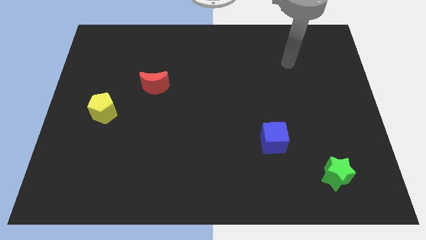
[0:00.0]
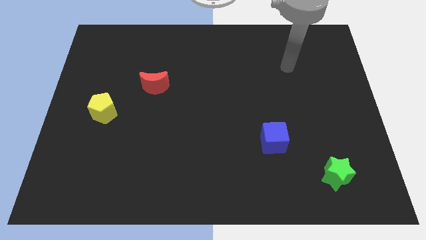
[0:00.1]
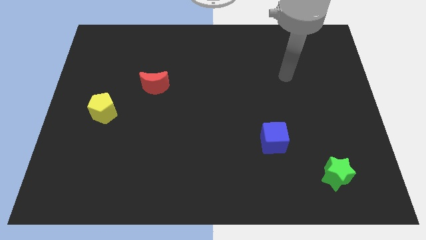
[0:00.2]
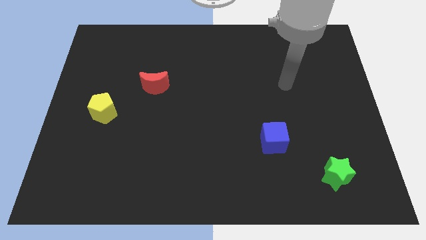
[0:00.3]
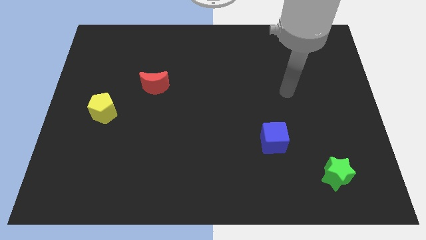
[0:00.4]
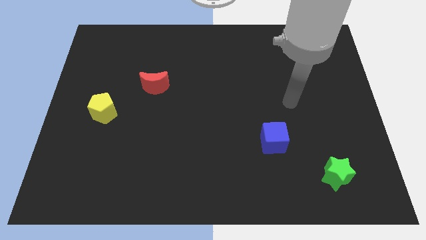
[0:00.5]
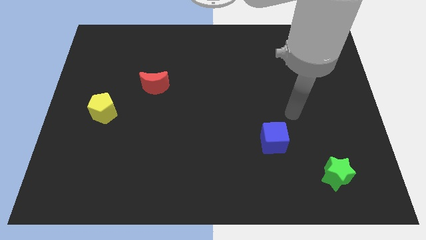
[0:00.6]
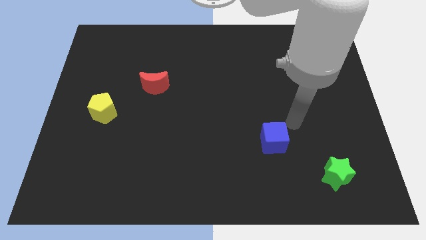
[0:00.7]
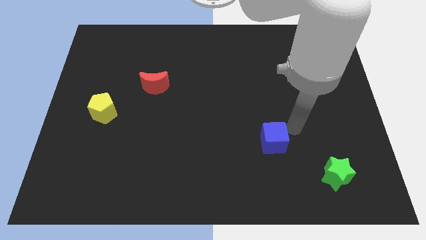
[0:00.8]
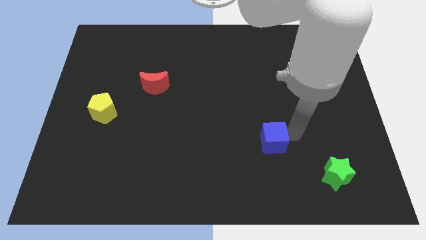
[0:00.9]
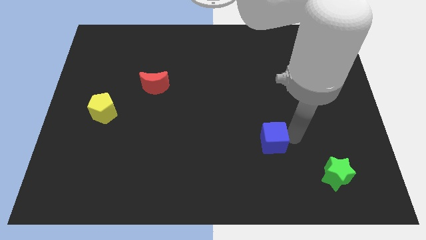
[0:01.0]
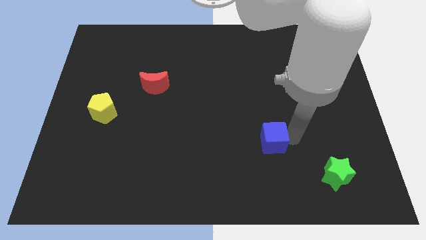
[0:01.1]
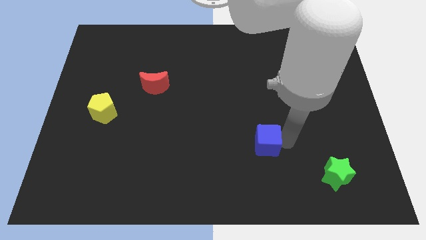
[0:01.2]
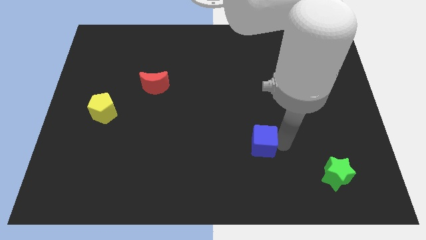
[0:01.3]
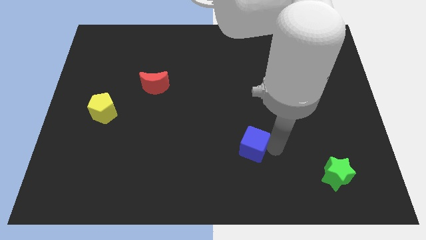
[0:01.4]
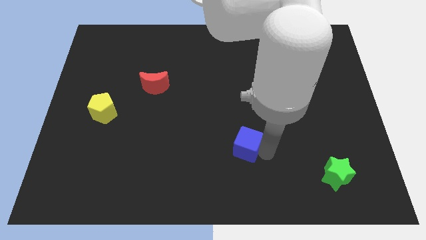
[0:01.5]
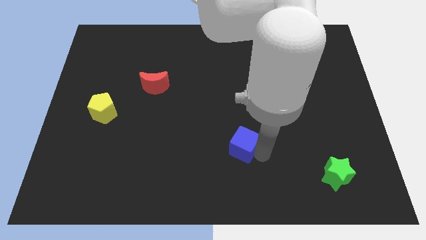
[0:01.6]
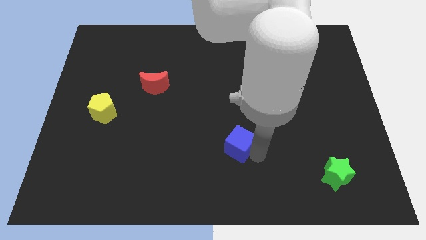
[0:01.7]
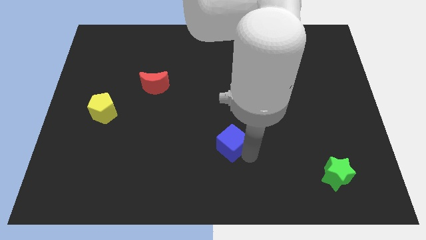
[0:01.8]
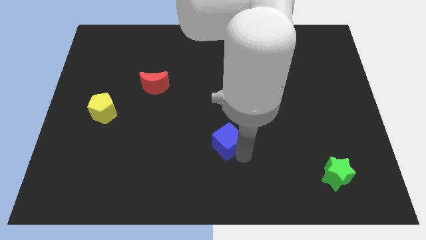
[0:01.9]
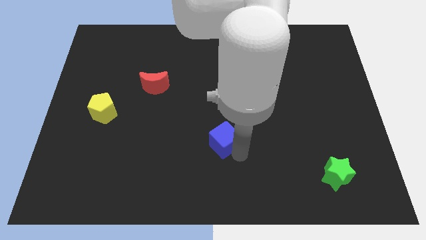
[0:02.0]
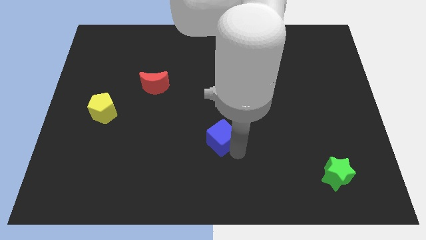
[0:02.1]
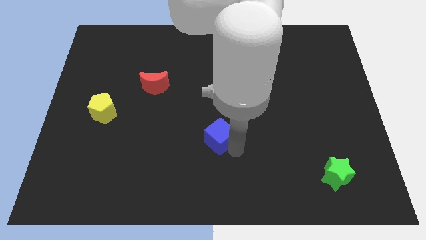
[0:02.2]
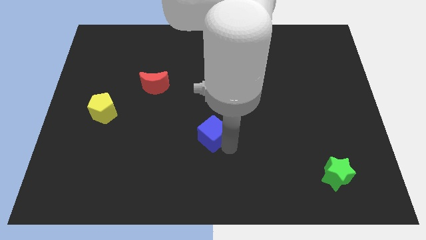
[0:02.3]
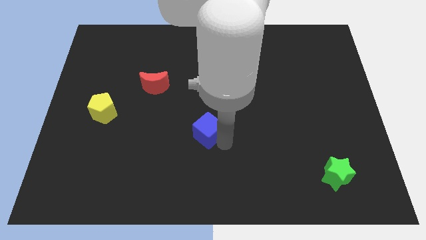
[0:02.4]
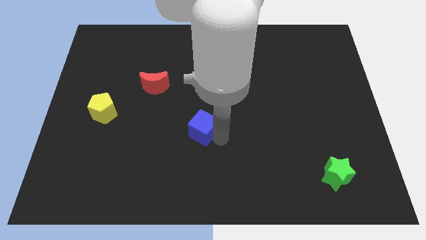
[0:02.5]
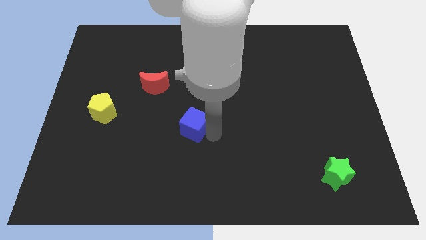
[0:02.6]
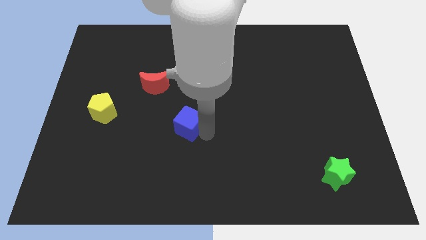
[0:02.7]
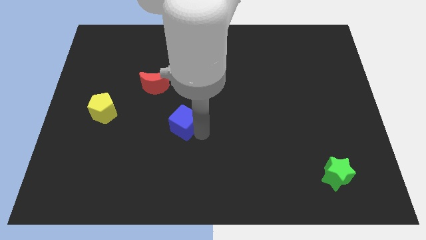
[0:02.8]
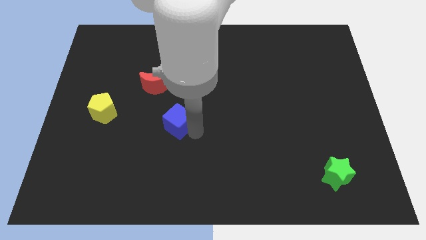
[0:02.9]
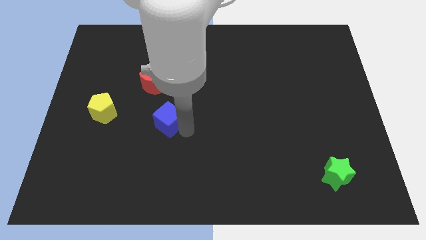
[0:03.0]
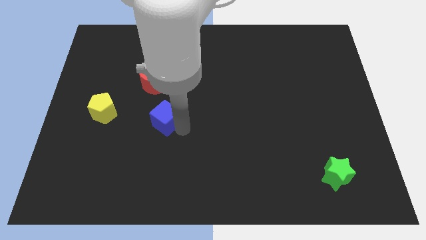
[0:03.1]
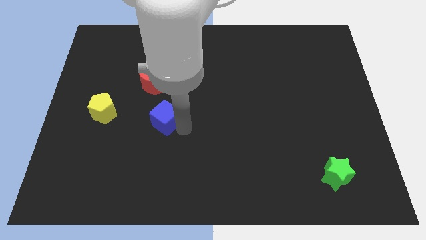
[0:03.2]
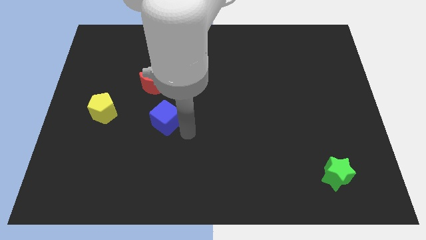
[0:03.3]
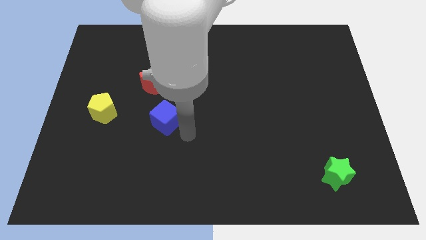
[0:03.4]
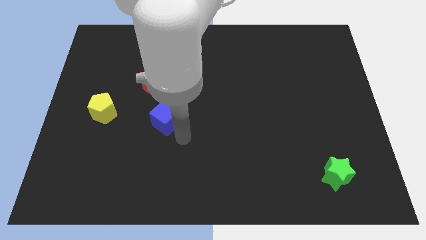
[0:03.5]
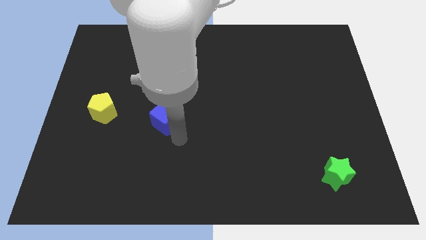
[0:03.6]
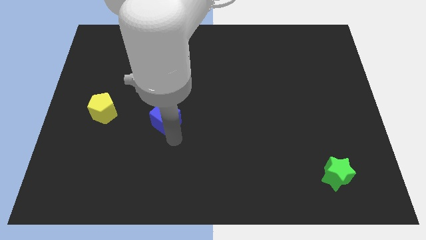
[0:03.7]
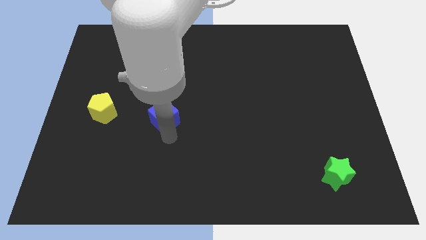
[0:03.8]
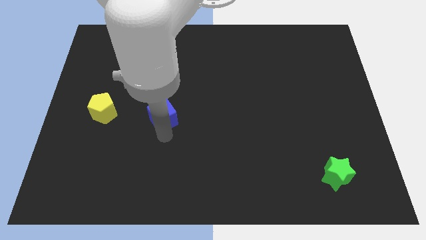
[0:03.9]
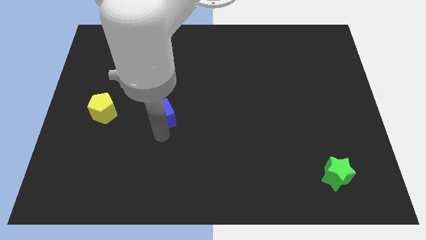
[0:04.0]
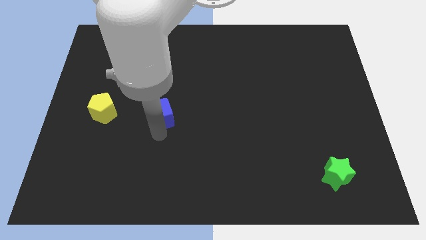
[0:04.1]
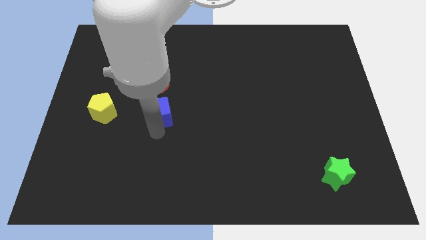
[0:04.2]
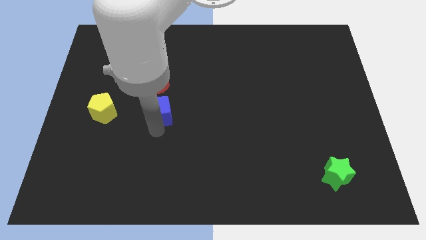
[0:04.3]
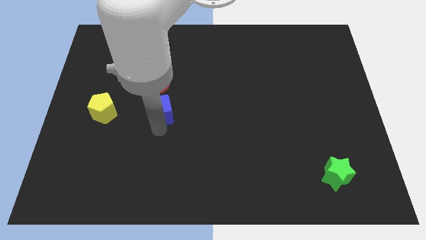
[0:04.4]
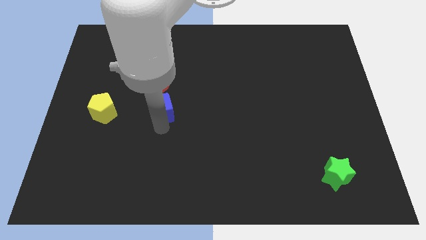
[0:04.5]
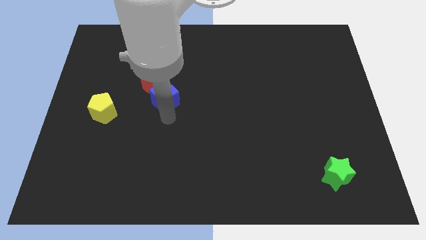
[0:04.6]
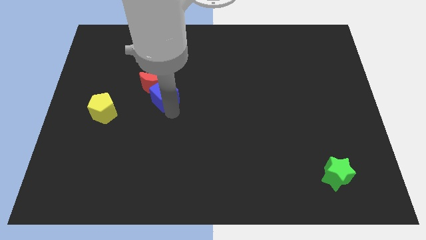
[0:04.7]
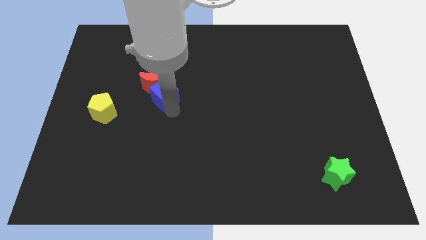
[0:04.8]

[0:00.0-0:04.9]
push the blue block next to the moon

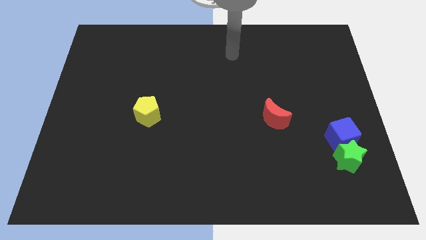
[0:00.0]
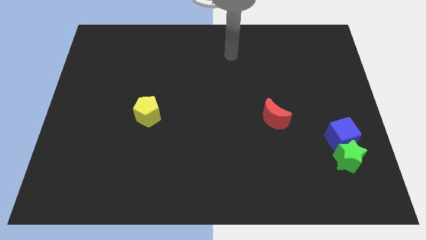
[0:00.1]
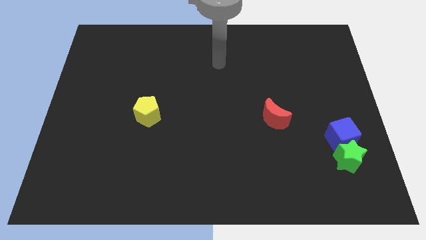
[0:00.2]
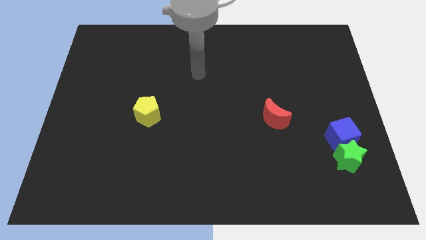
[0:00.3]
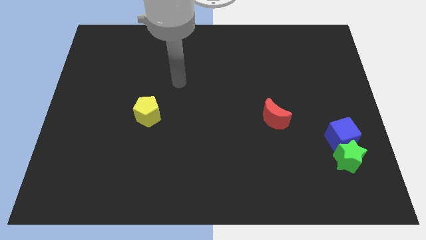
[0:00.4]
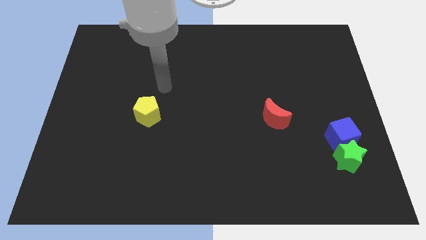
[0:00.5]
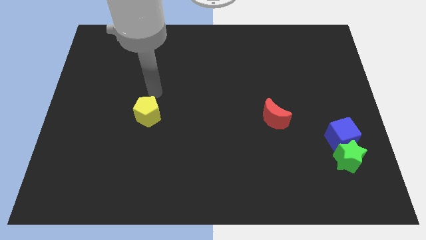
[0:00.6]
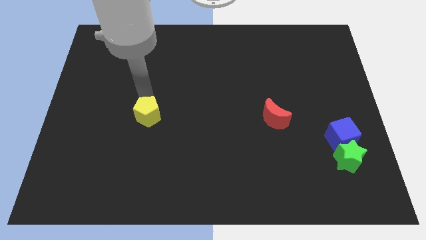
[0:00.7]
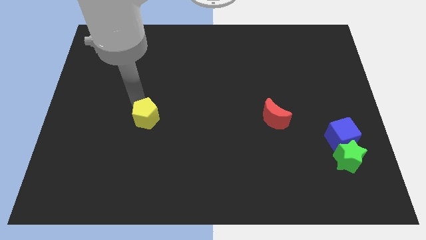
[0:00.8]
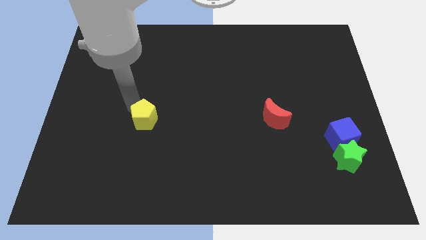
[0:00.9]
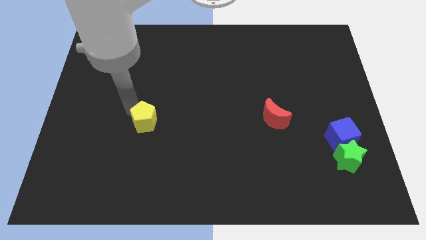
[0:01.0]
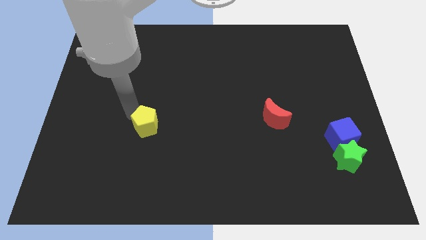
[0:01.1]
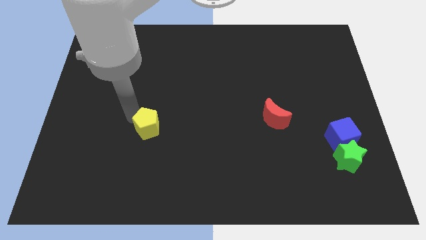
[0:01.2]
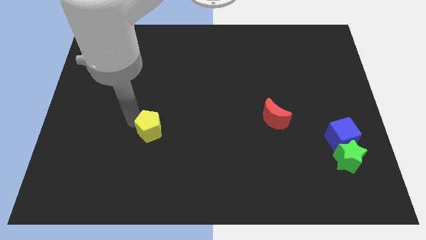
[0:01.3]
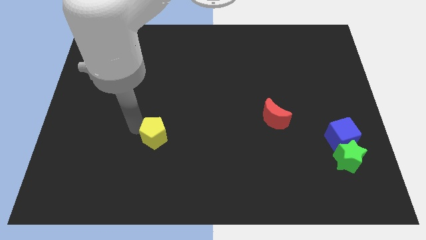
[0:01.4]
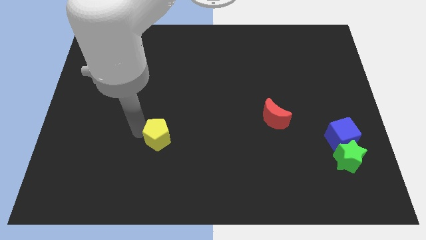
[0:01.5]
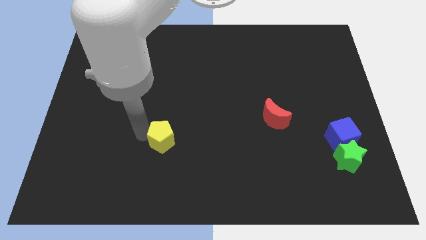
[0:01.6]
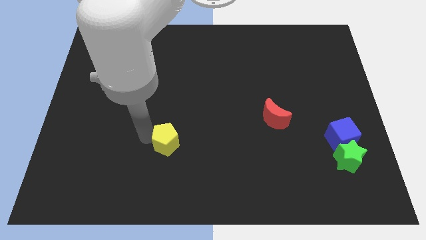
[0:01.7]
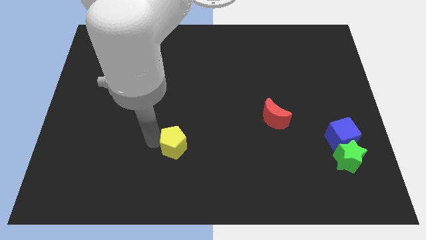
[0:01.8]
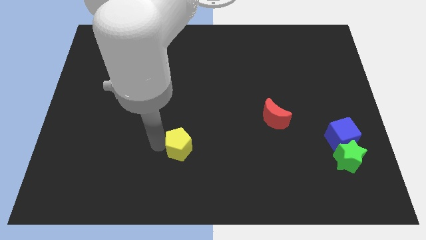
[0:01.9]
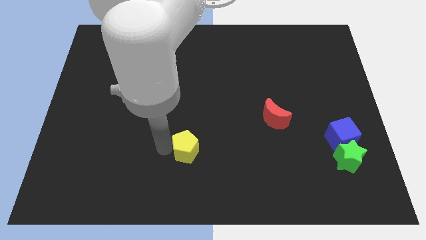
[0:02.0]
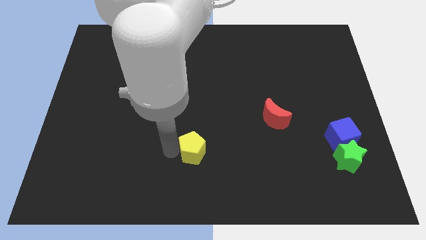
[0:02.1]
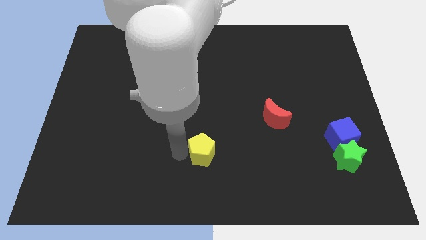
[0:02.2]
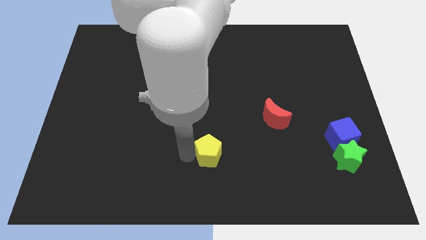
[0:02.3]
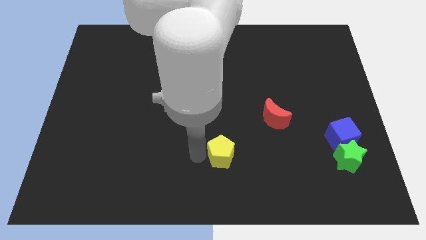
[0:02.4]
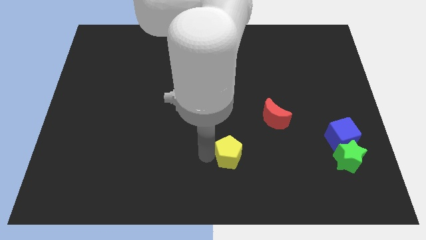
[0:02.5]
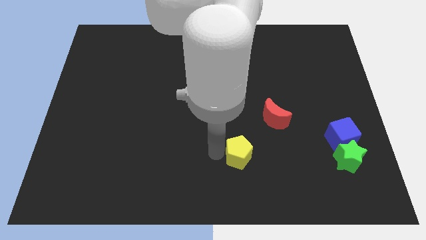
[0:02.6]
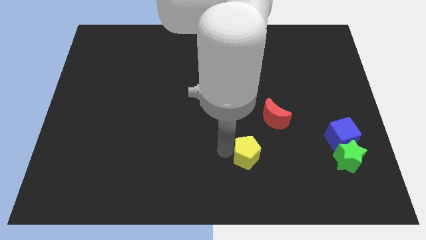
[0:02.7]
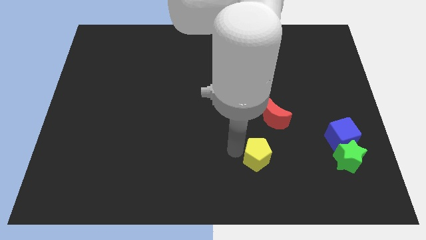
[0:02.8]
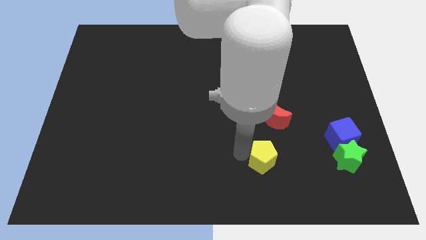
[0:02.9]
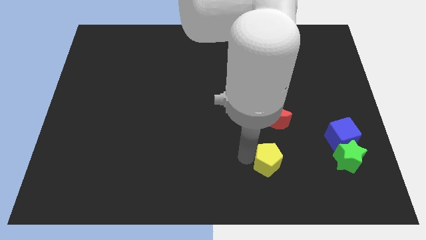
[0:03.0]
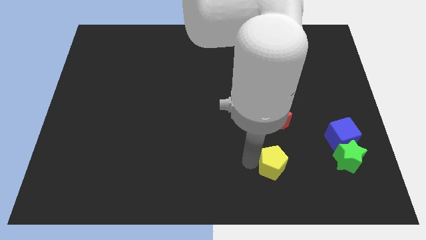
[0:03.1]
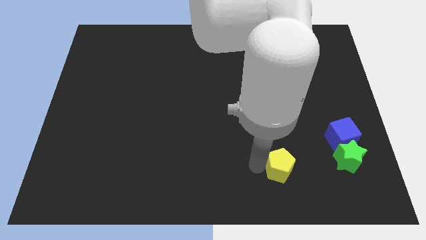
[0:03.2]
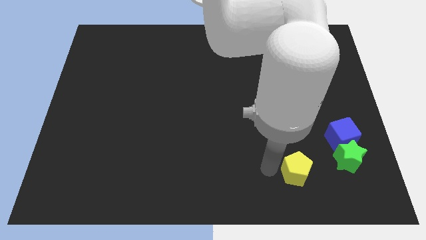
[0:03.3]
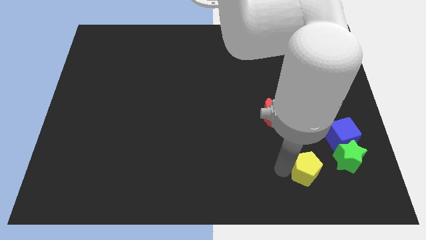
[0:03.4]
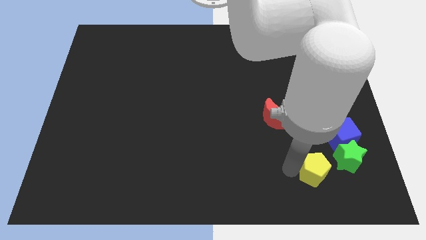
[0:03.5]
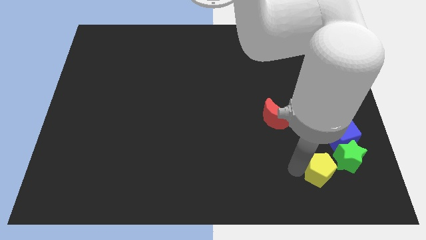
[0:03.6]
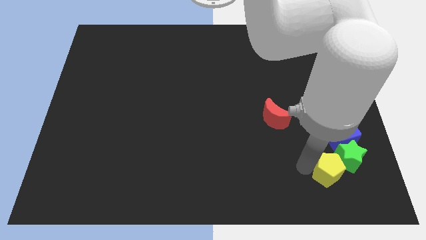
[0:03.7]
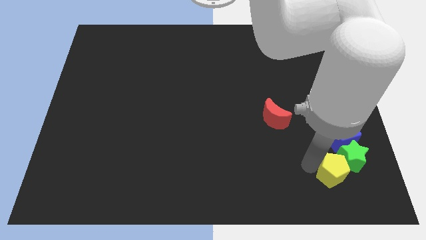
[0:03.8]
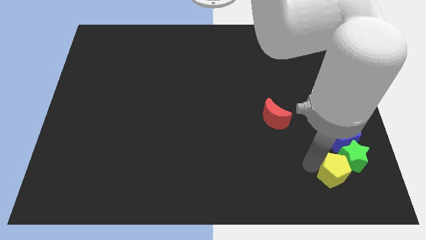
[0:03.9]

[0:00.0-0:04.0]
push the pentagon next to the green star
